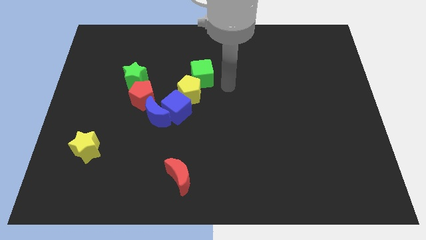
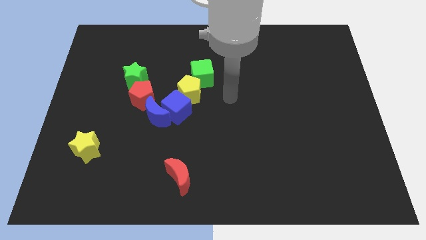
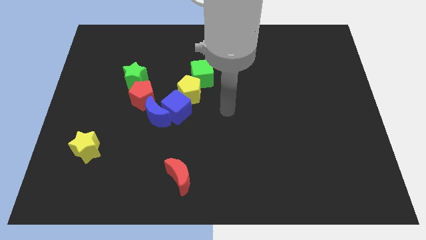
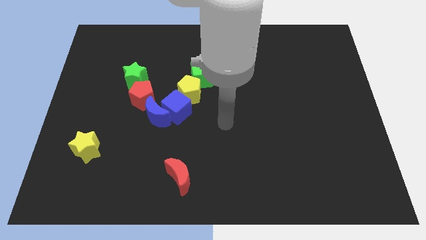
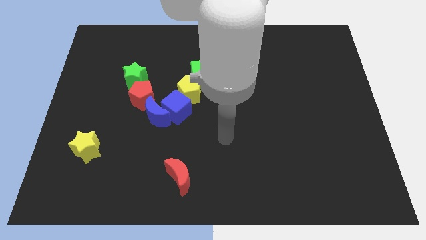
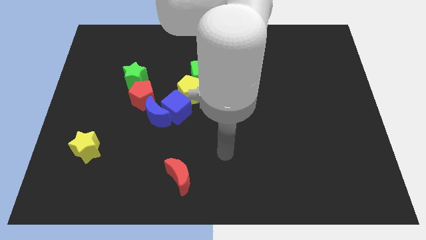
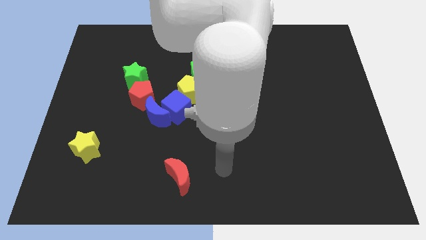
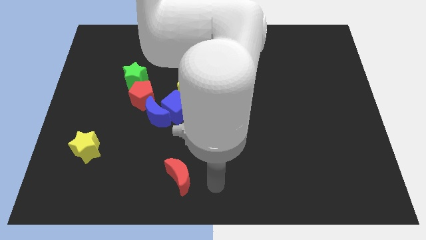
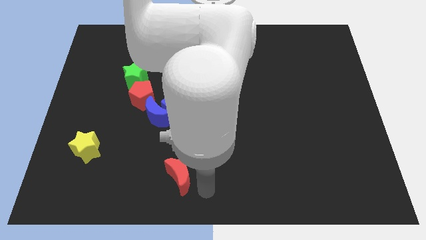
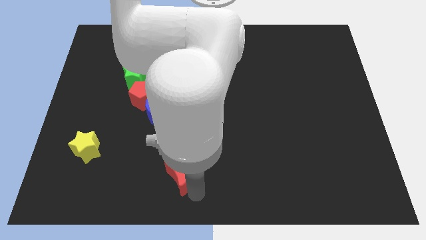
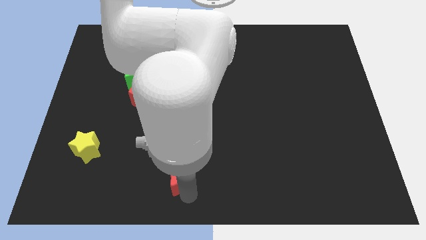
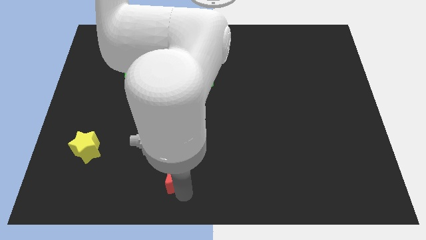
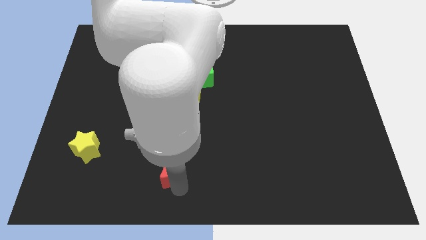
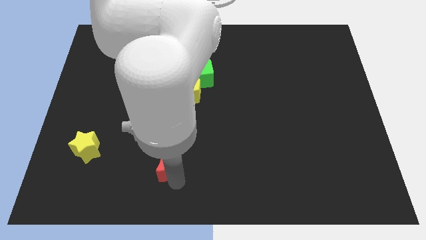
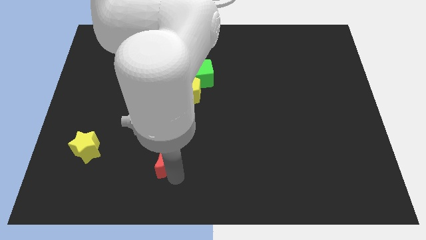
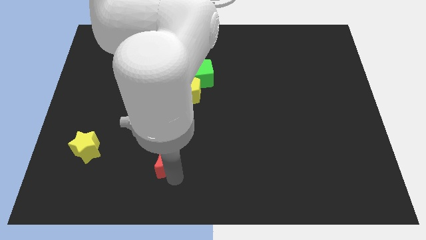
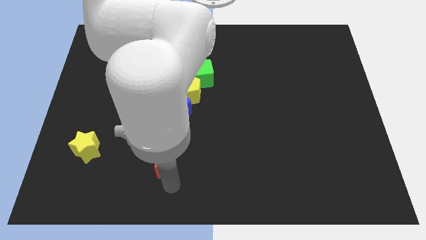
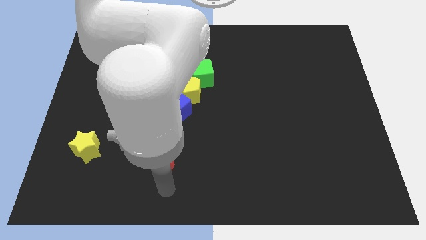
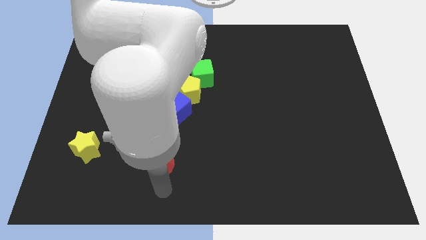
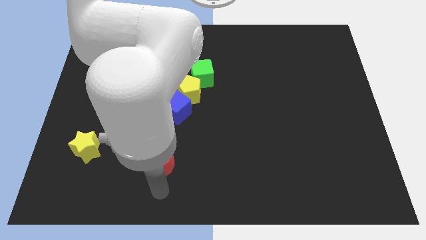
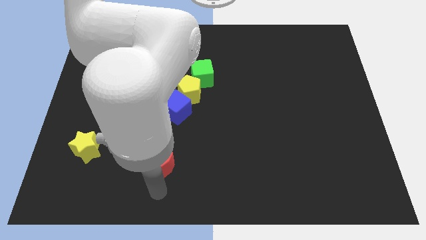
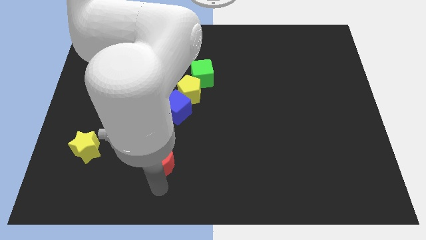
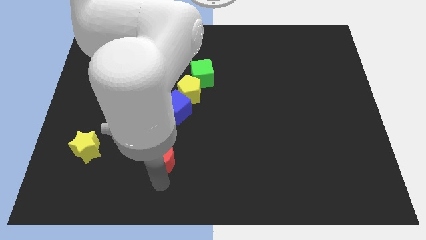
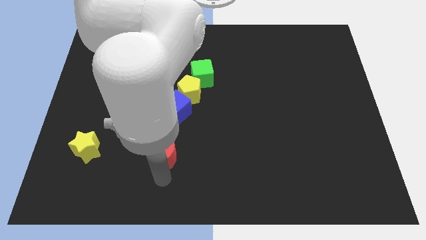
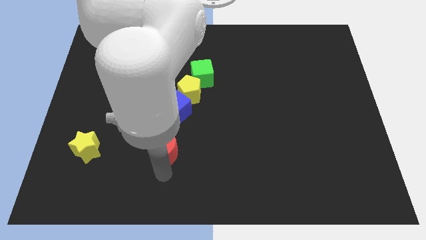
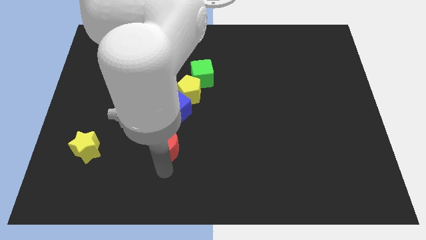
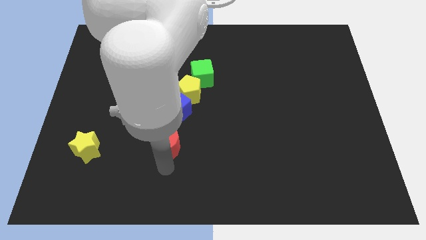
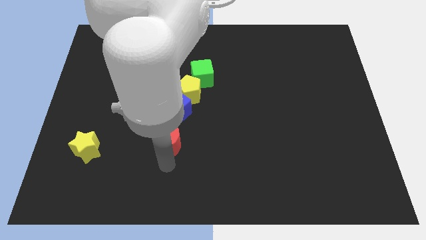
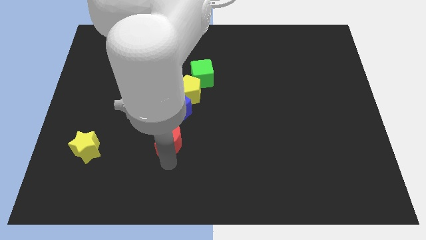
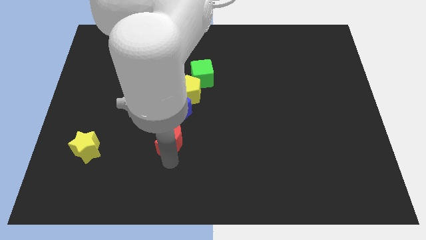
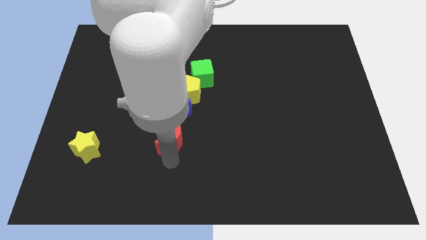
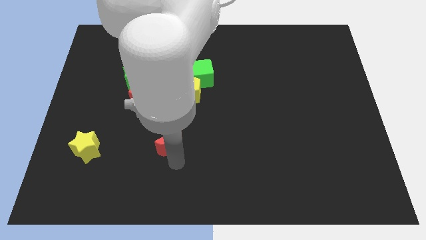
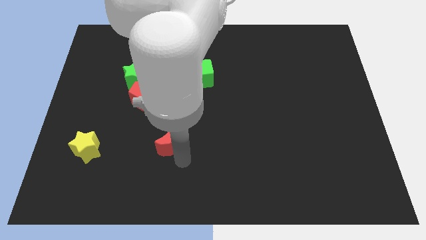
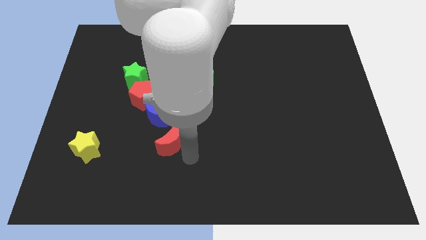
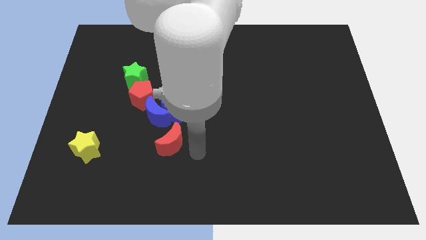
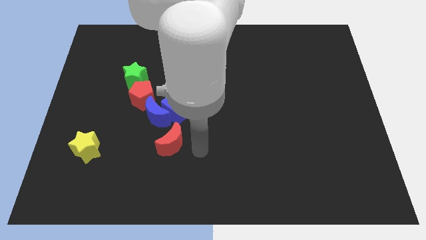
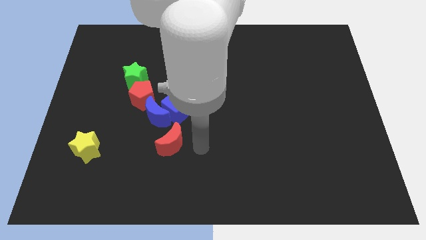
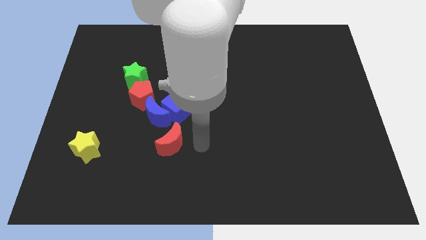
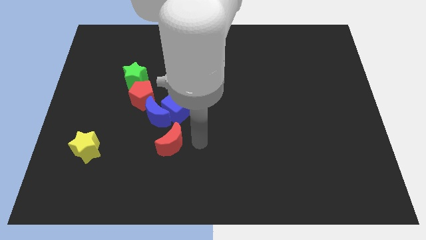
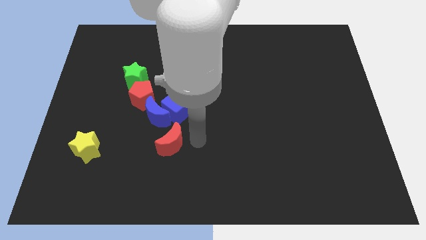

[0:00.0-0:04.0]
place the red crescent below the blue cube

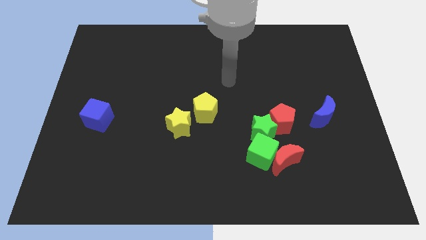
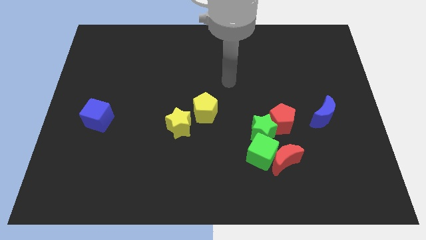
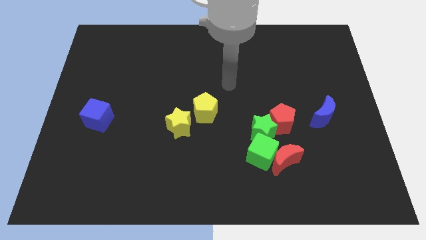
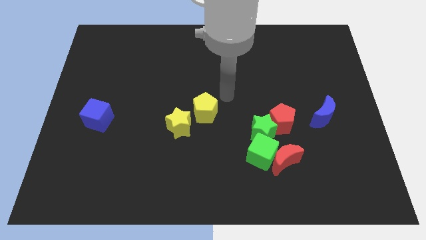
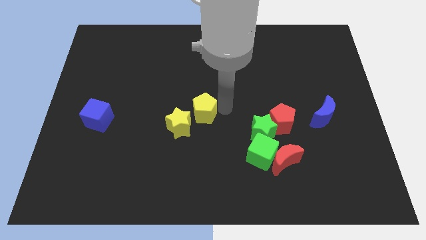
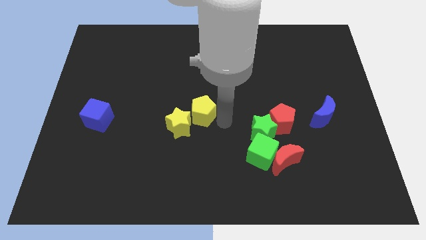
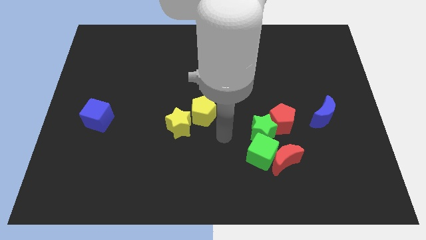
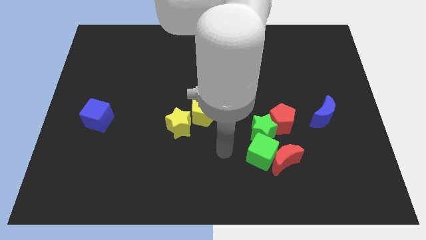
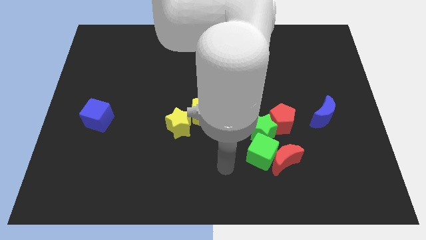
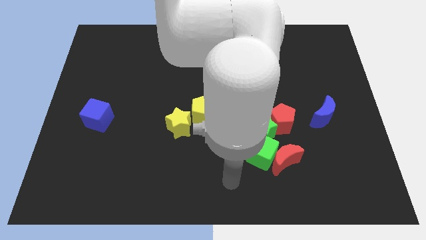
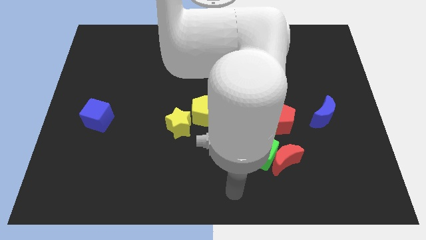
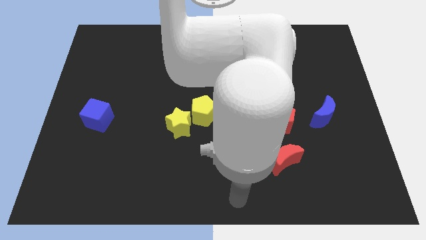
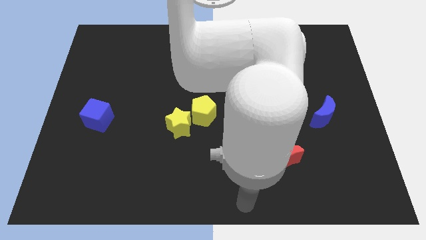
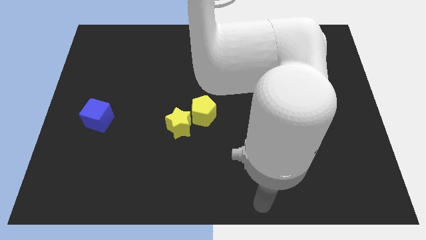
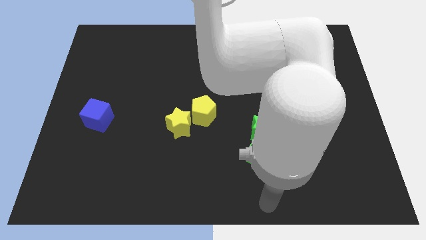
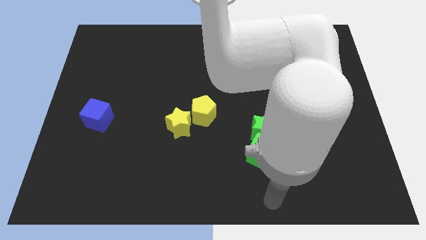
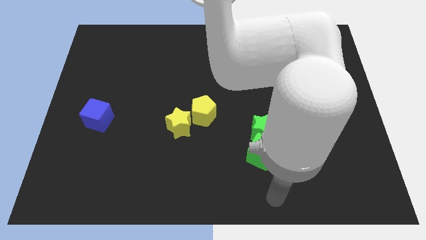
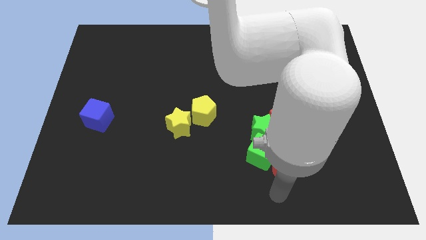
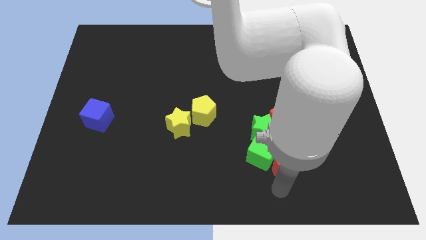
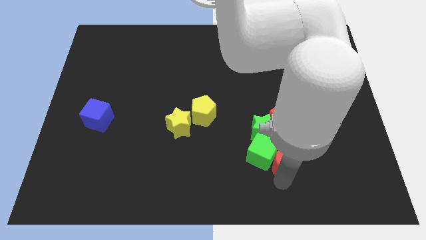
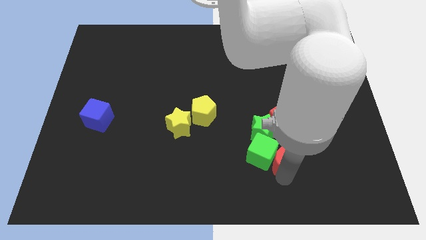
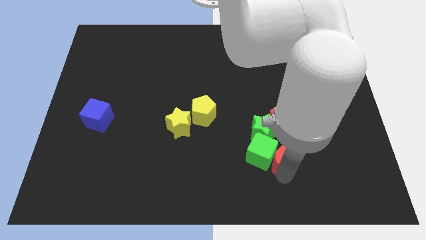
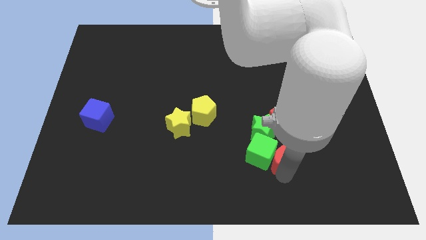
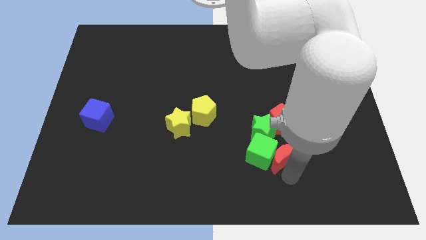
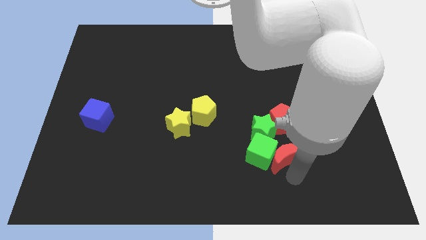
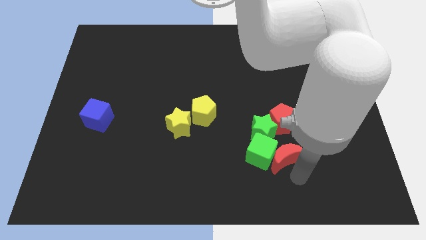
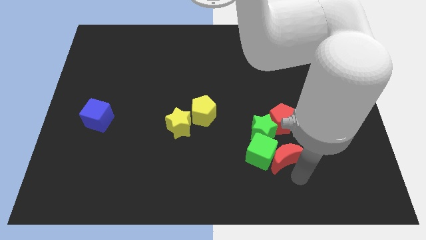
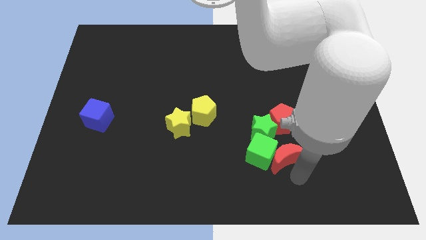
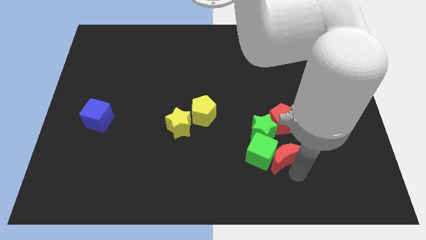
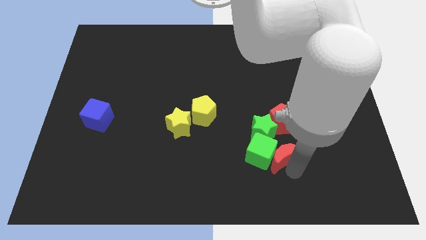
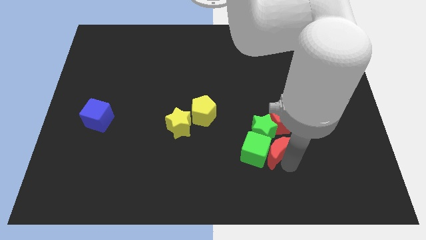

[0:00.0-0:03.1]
slide red moon into green cube

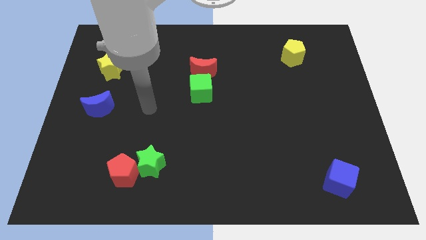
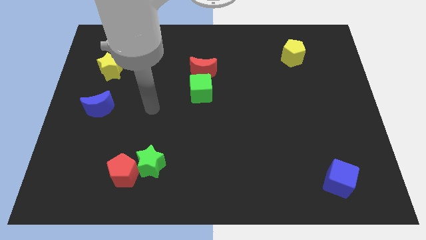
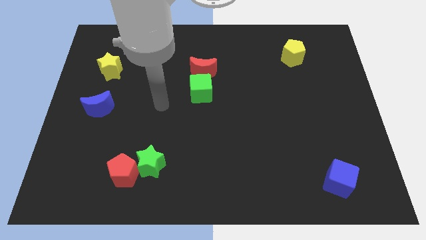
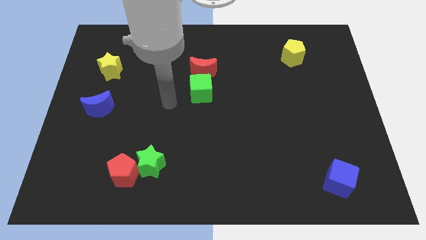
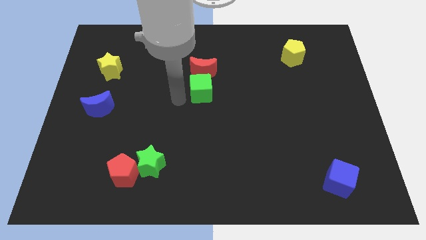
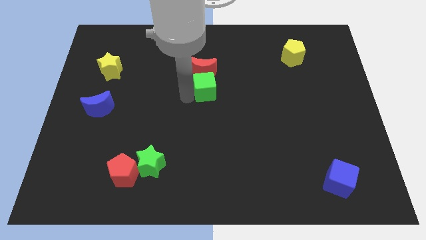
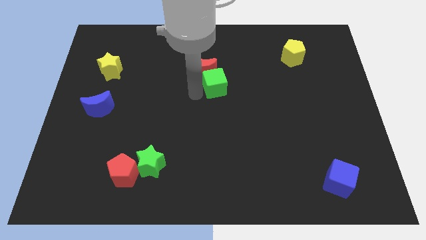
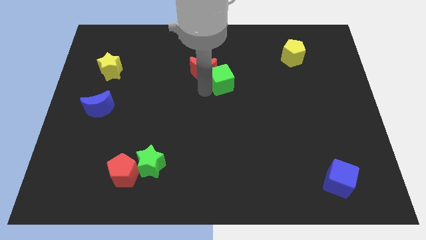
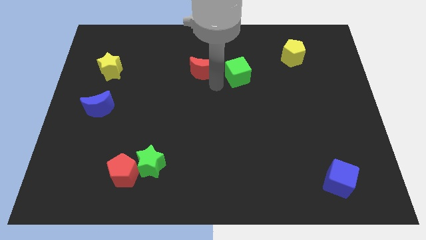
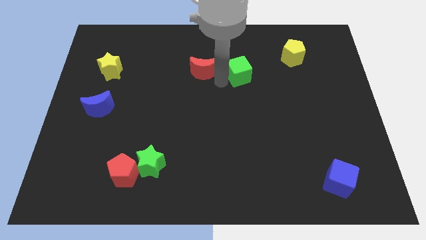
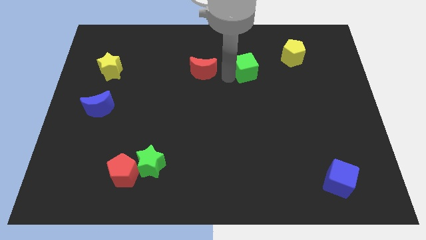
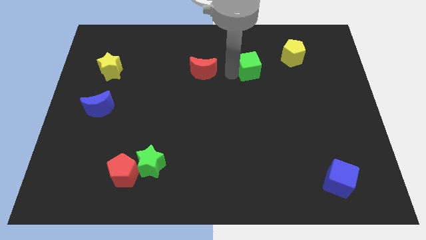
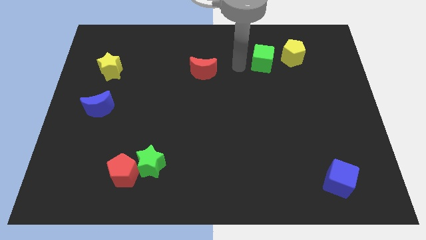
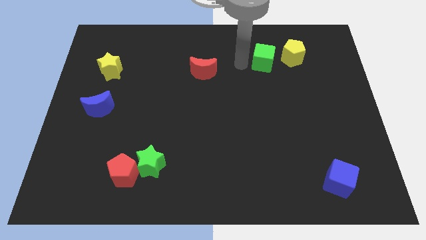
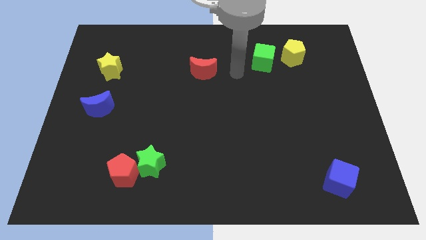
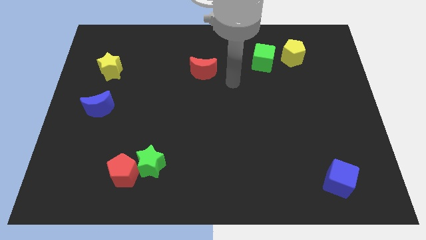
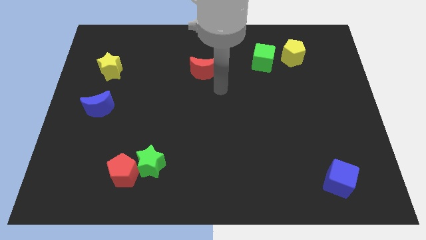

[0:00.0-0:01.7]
push the green cube close to the yellow pentagon

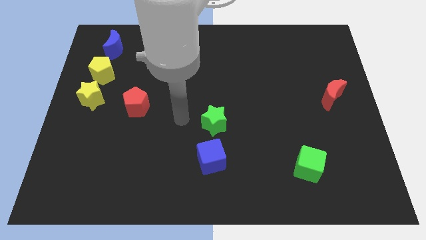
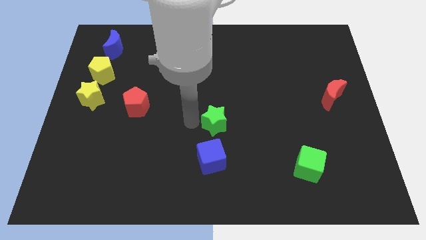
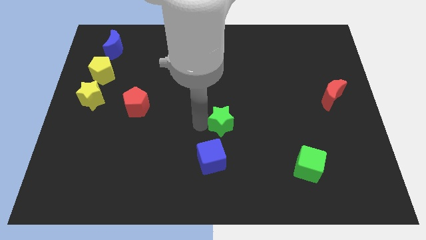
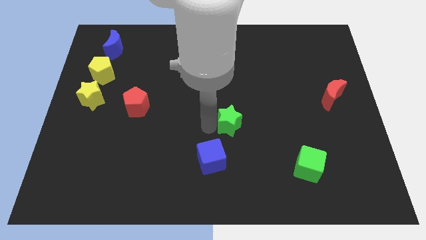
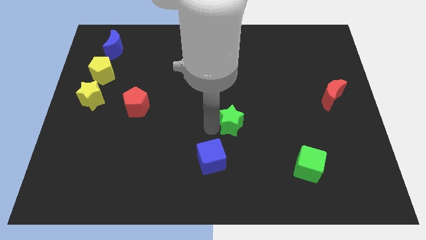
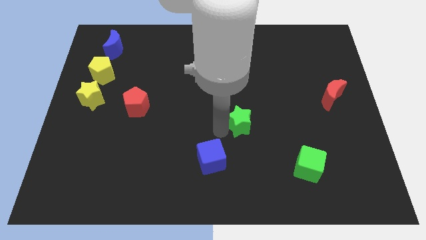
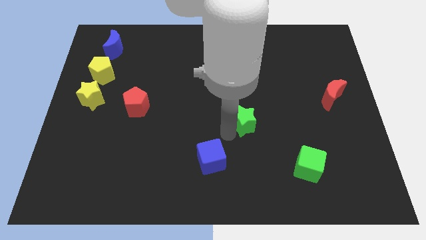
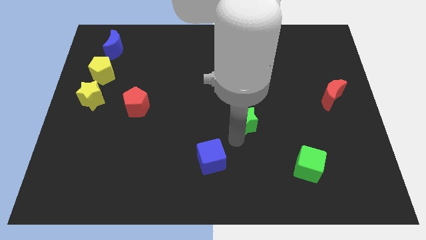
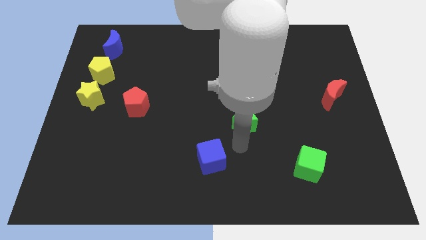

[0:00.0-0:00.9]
place the green star diagonally to blue cube
